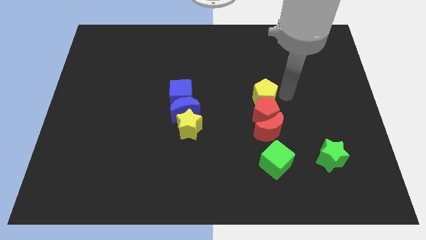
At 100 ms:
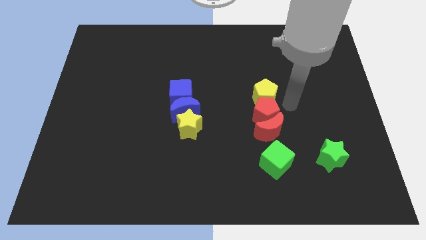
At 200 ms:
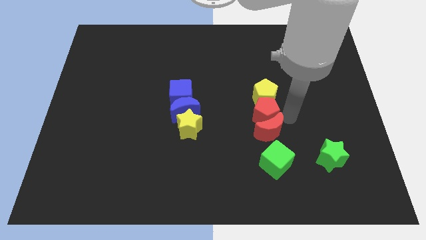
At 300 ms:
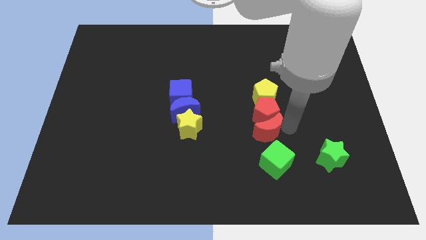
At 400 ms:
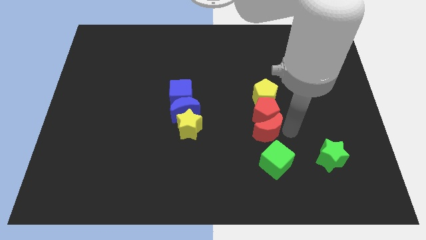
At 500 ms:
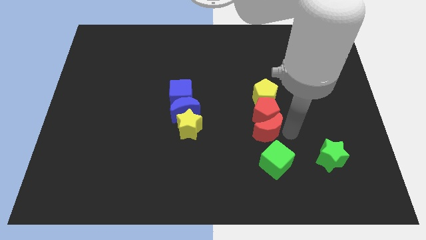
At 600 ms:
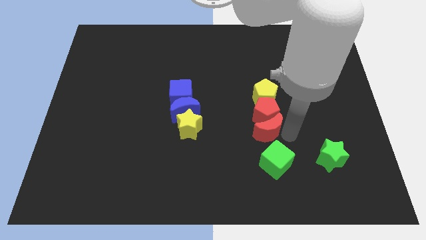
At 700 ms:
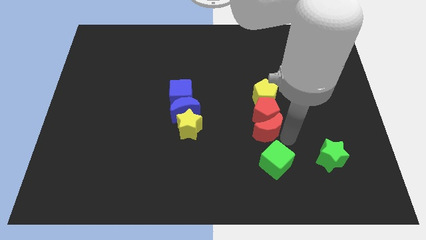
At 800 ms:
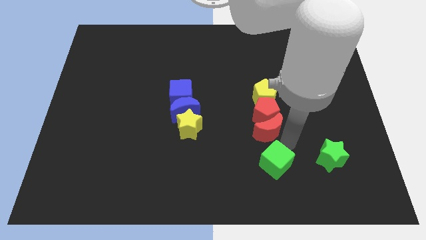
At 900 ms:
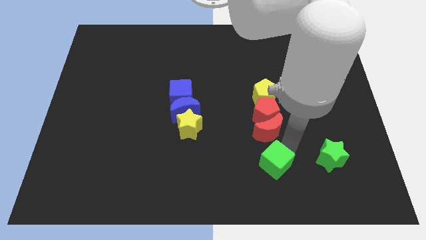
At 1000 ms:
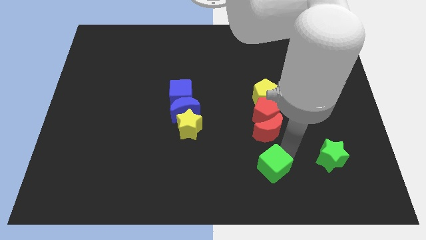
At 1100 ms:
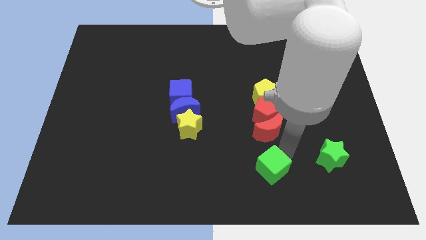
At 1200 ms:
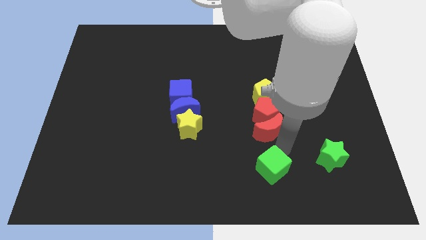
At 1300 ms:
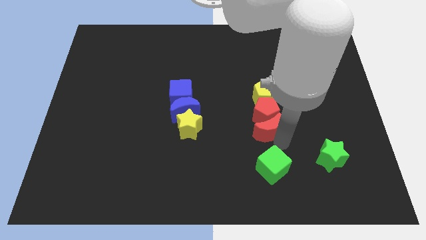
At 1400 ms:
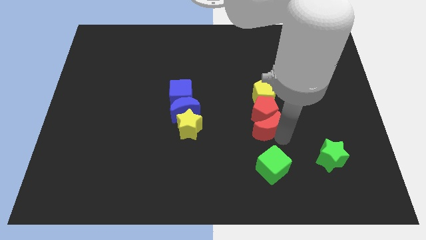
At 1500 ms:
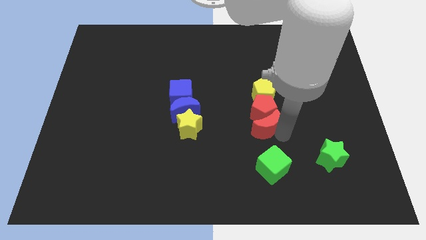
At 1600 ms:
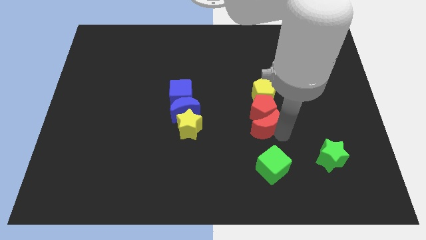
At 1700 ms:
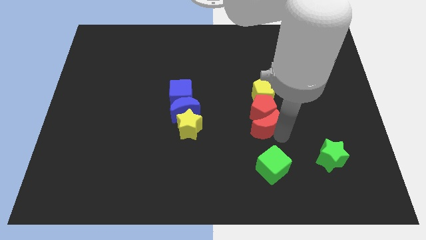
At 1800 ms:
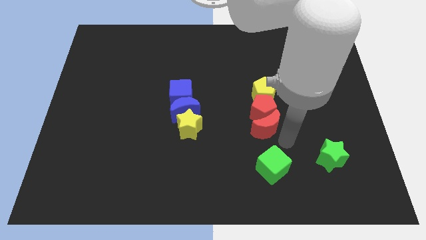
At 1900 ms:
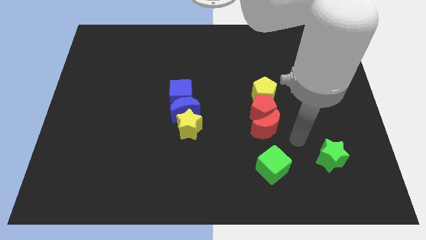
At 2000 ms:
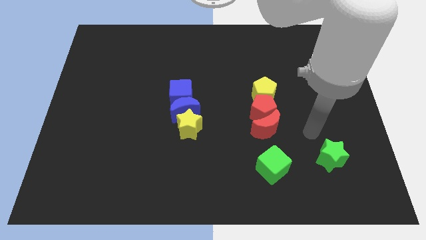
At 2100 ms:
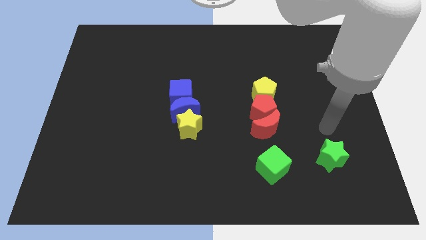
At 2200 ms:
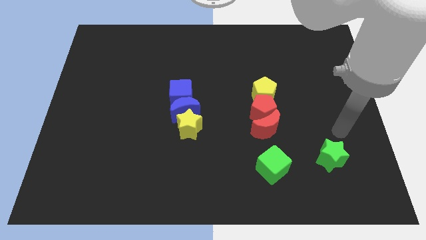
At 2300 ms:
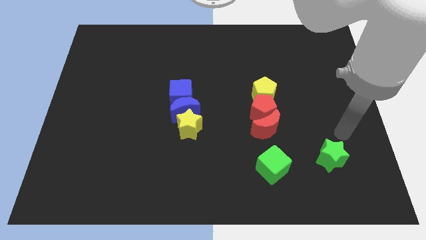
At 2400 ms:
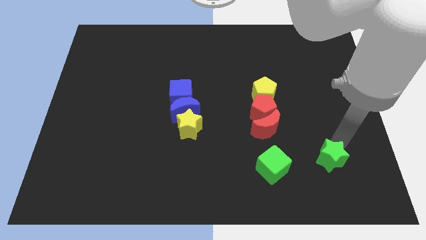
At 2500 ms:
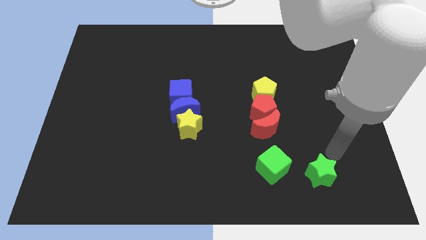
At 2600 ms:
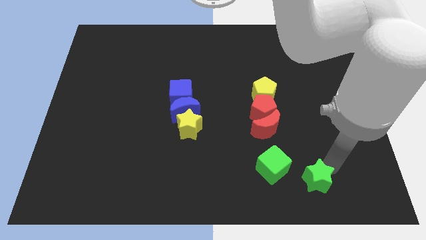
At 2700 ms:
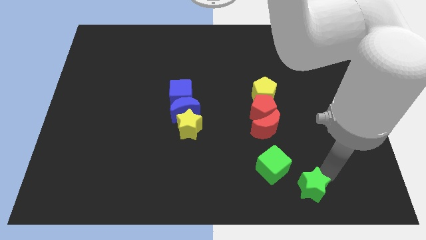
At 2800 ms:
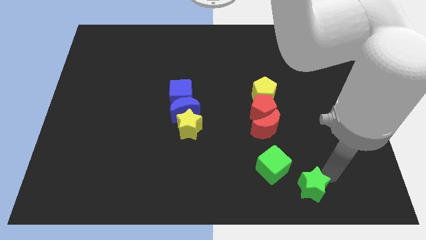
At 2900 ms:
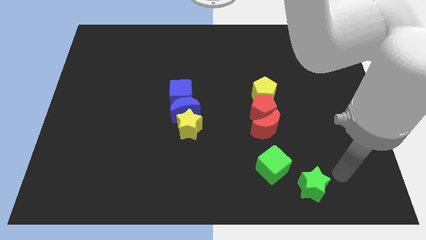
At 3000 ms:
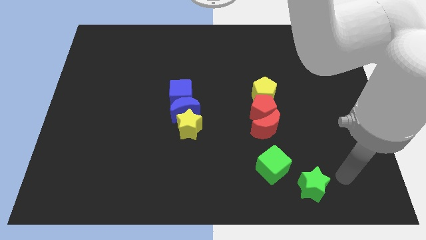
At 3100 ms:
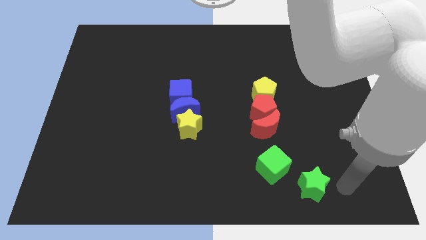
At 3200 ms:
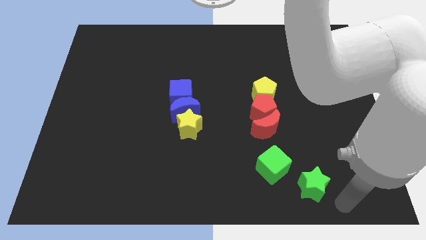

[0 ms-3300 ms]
place the green star diagonal to the green cube

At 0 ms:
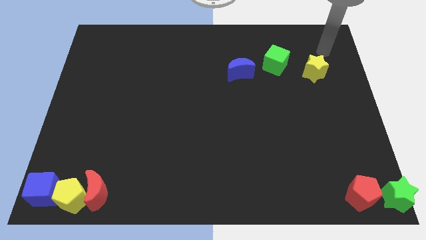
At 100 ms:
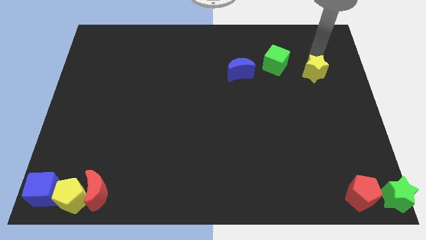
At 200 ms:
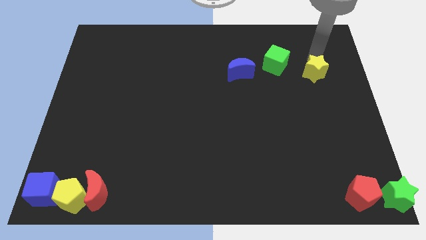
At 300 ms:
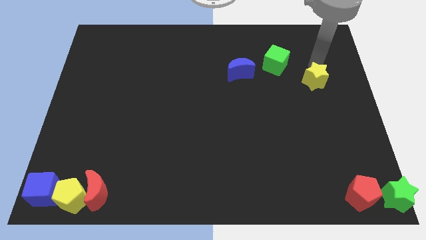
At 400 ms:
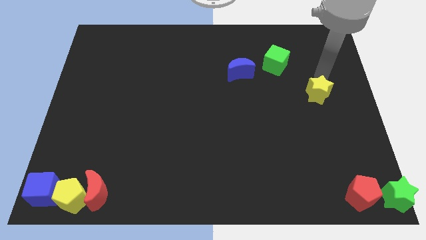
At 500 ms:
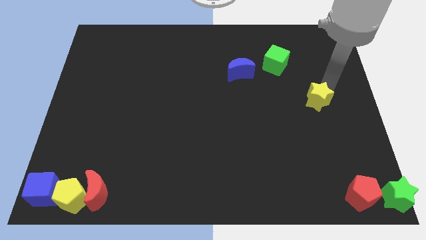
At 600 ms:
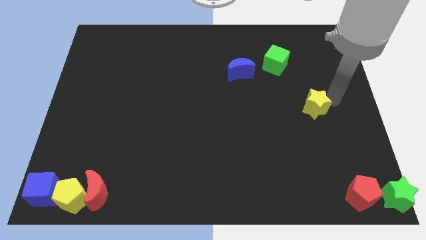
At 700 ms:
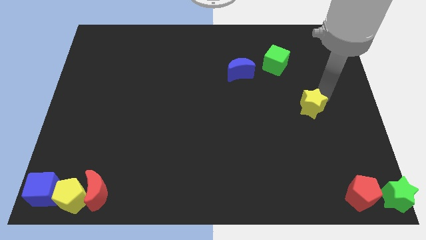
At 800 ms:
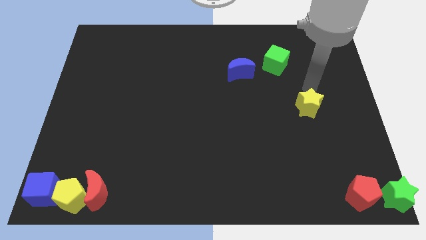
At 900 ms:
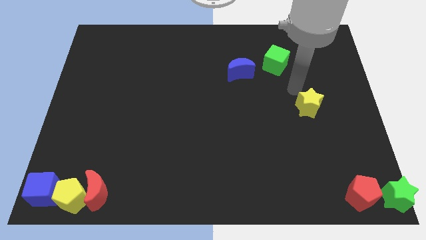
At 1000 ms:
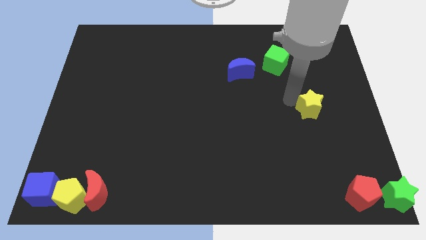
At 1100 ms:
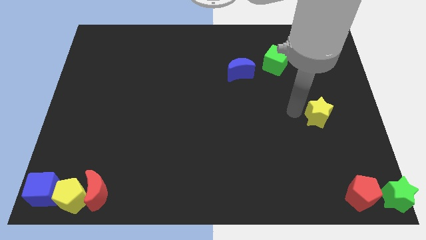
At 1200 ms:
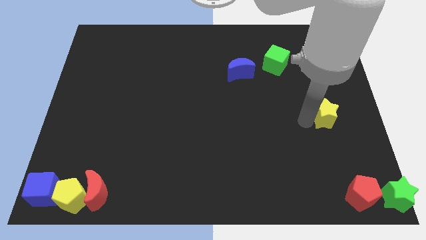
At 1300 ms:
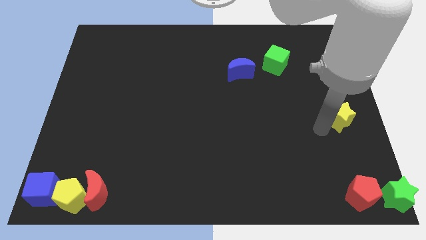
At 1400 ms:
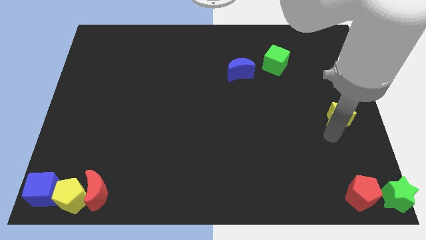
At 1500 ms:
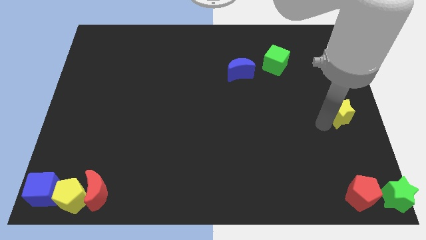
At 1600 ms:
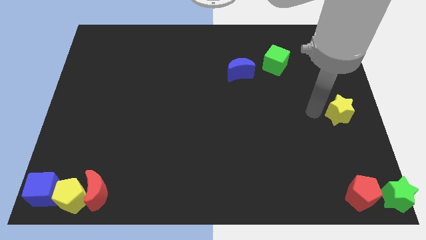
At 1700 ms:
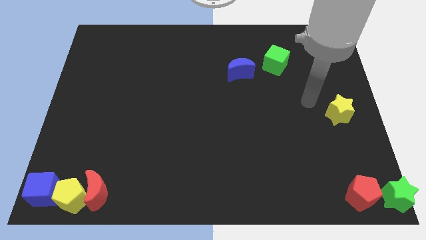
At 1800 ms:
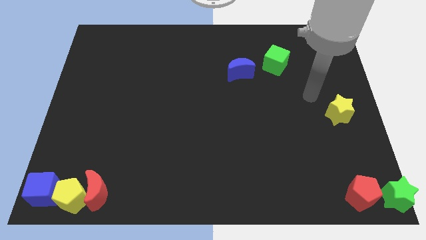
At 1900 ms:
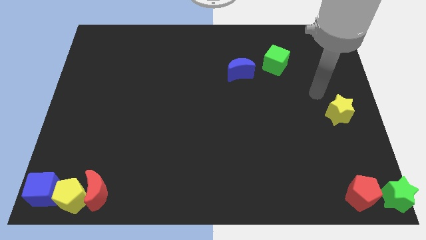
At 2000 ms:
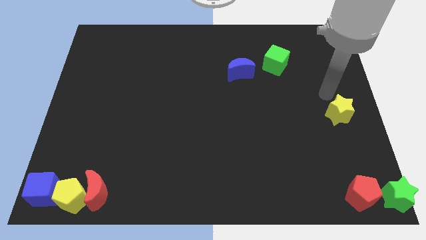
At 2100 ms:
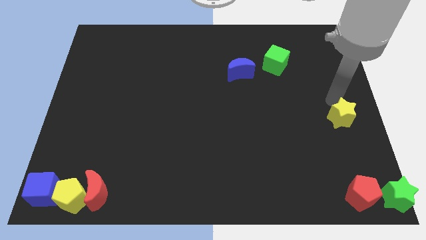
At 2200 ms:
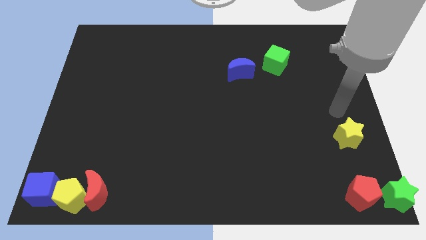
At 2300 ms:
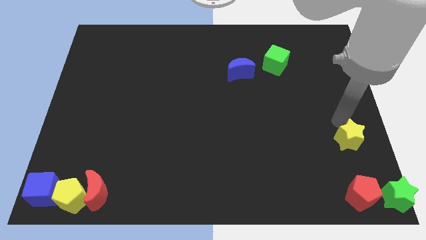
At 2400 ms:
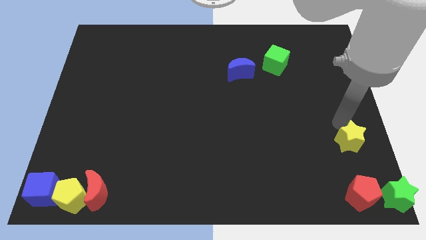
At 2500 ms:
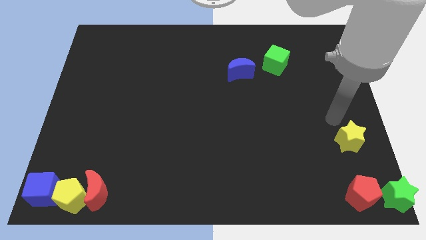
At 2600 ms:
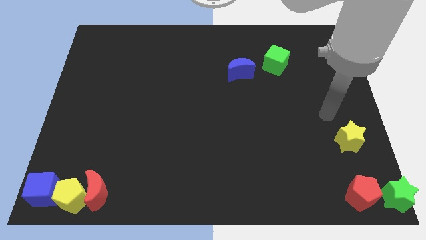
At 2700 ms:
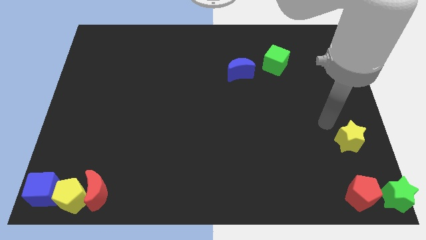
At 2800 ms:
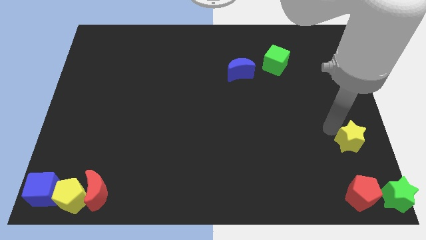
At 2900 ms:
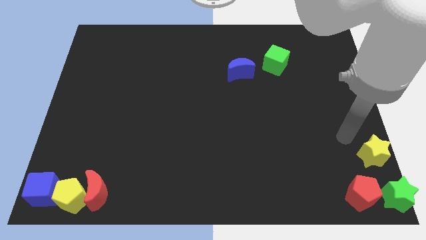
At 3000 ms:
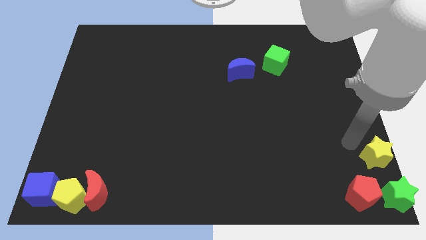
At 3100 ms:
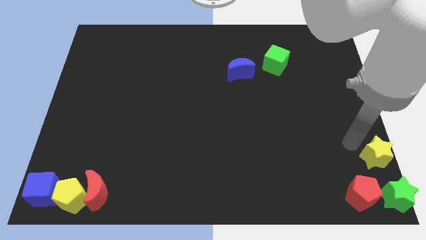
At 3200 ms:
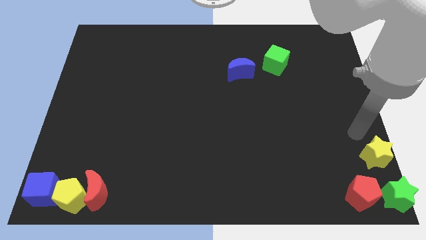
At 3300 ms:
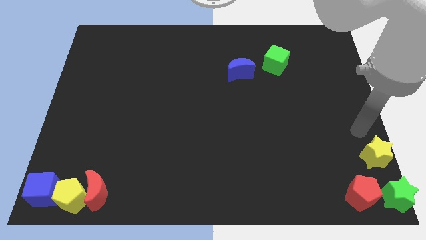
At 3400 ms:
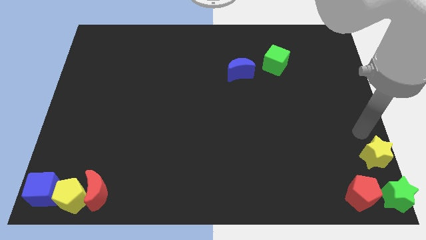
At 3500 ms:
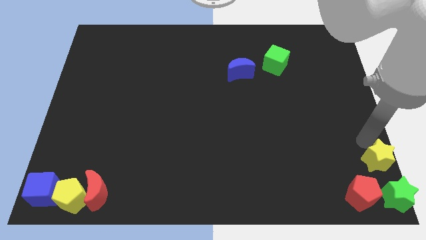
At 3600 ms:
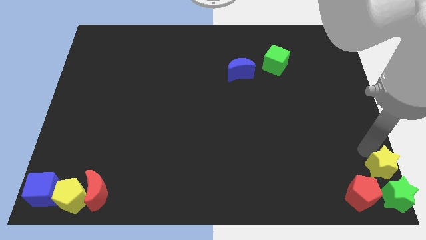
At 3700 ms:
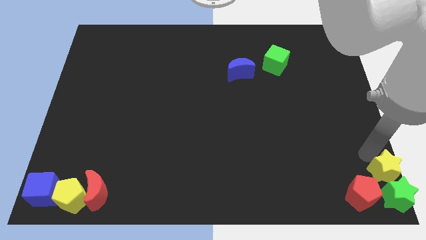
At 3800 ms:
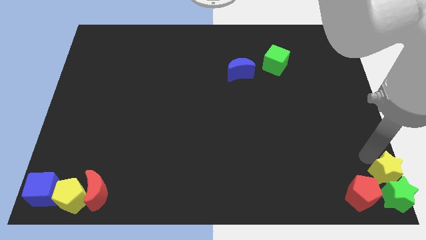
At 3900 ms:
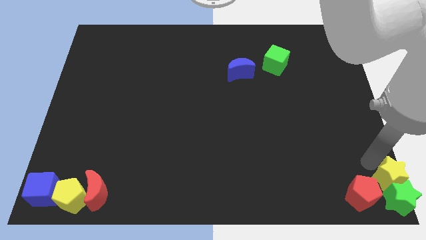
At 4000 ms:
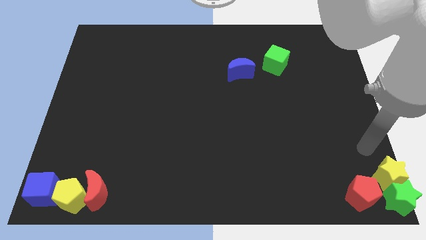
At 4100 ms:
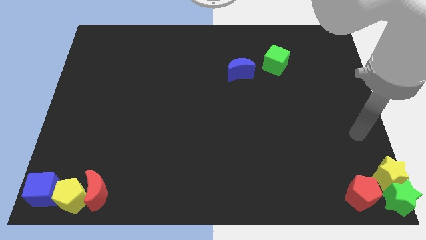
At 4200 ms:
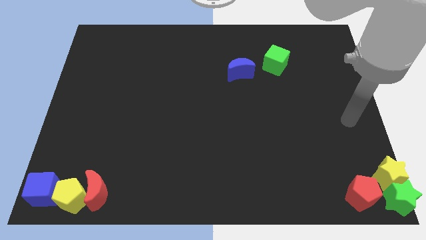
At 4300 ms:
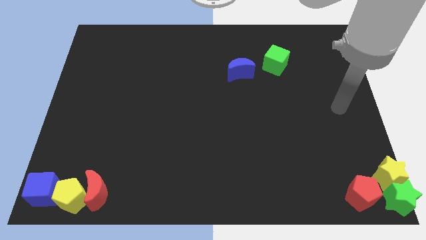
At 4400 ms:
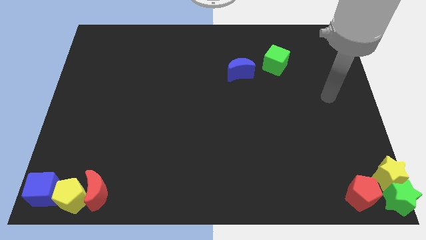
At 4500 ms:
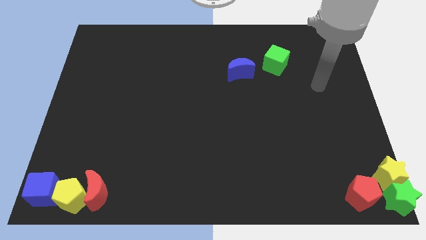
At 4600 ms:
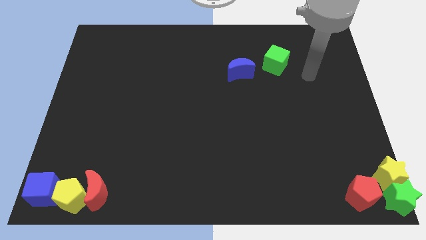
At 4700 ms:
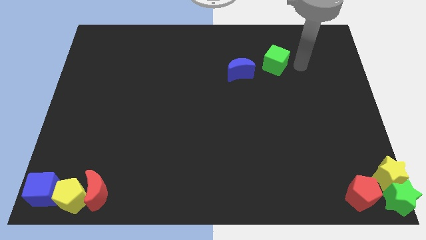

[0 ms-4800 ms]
move yellow star above green star

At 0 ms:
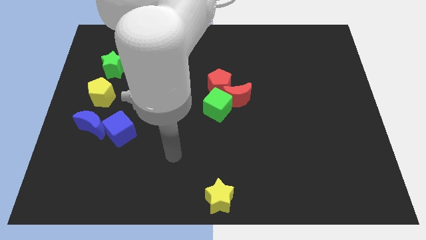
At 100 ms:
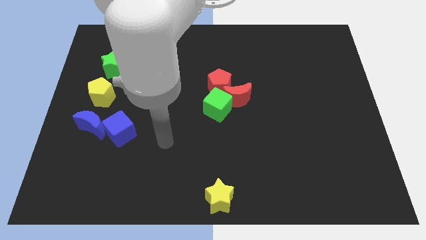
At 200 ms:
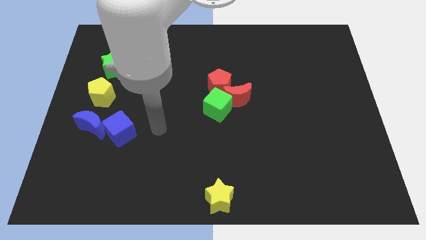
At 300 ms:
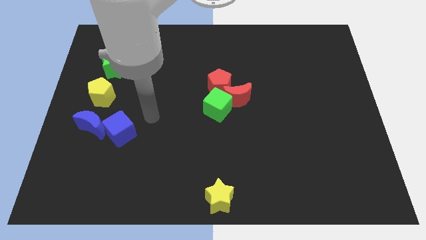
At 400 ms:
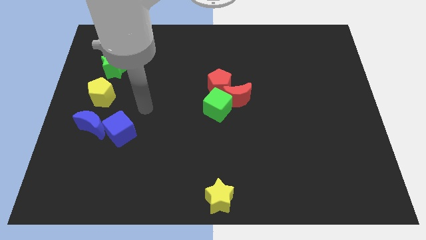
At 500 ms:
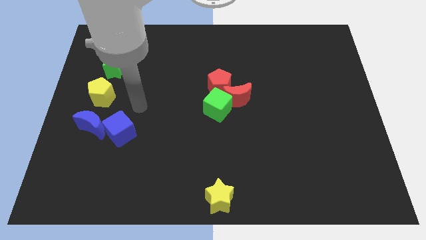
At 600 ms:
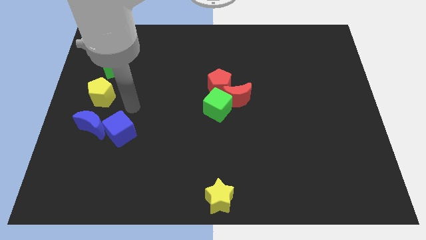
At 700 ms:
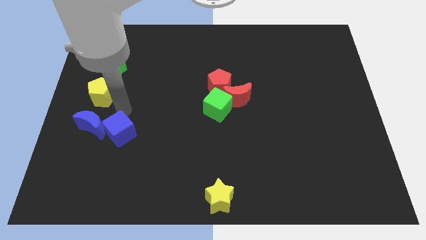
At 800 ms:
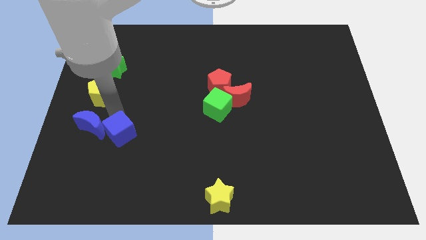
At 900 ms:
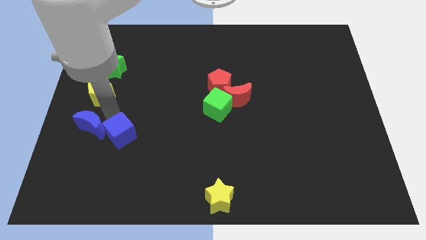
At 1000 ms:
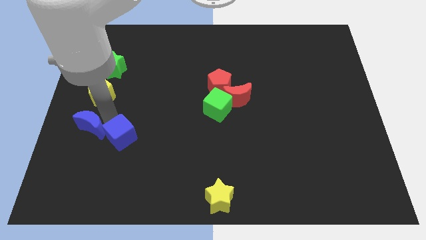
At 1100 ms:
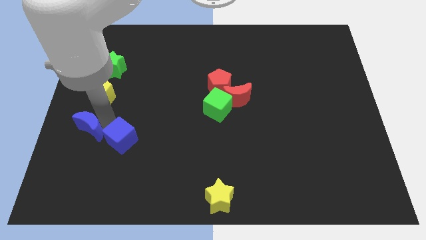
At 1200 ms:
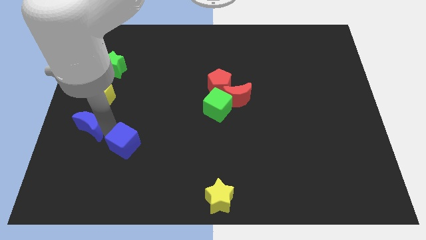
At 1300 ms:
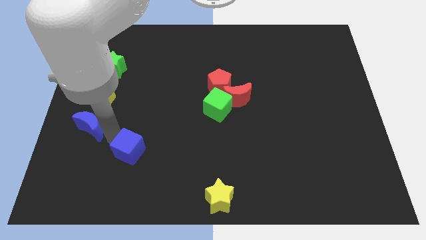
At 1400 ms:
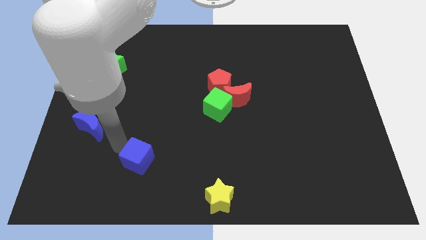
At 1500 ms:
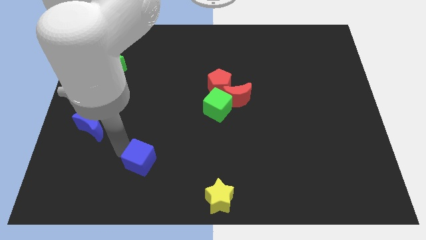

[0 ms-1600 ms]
separate the blue cube and the blue moon
